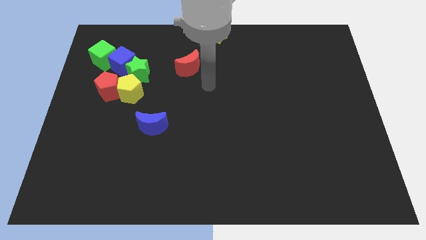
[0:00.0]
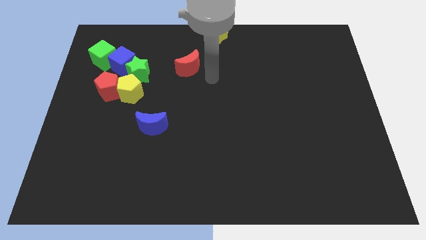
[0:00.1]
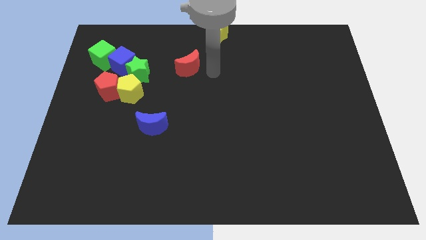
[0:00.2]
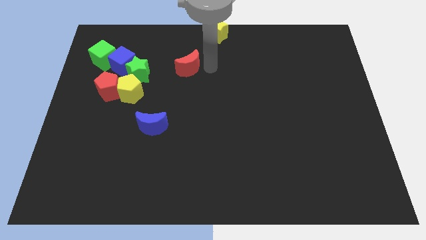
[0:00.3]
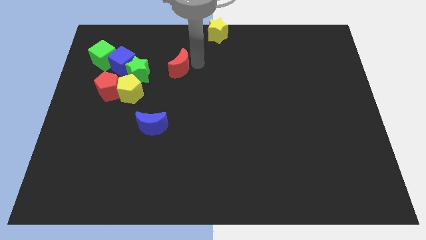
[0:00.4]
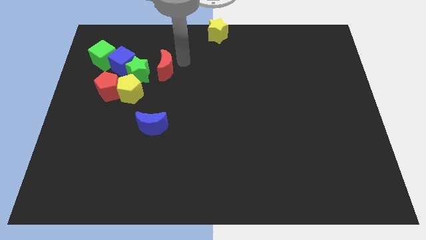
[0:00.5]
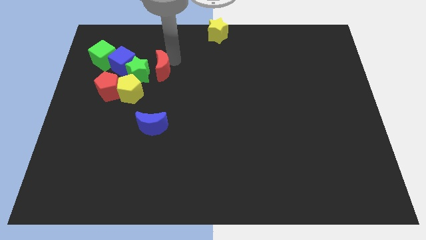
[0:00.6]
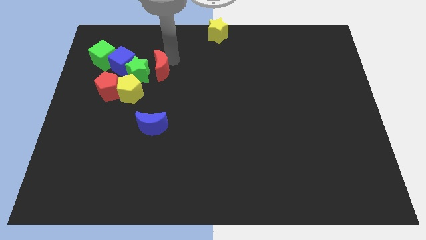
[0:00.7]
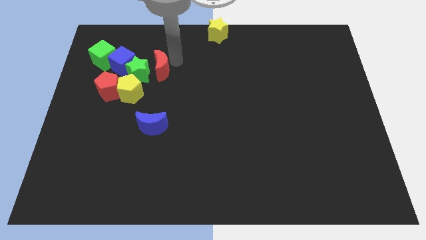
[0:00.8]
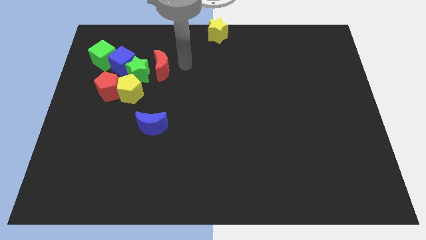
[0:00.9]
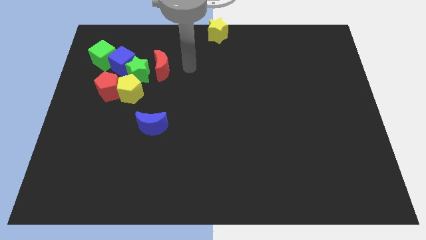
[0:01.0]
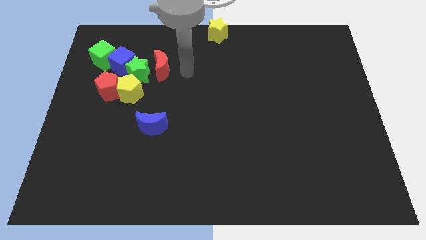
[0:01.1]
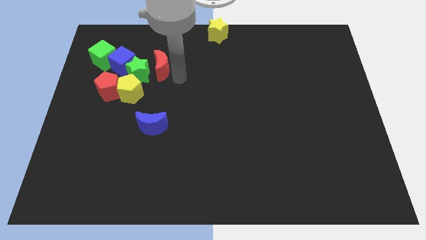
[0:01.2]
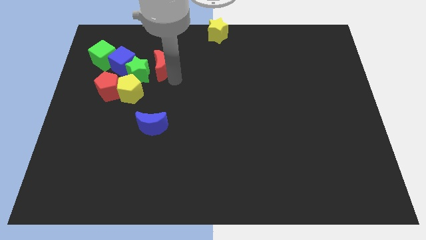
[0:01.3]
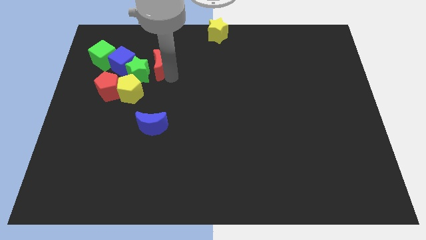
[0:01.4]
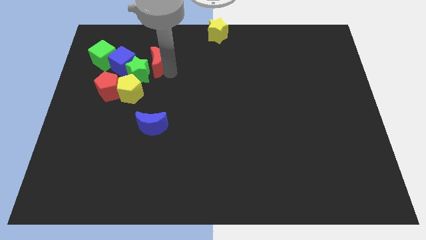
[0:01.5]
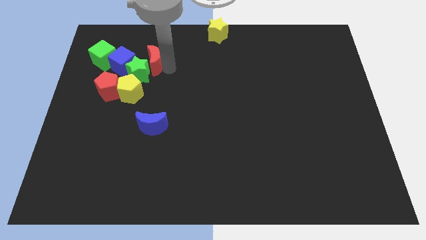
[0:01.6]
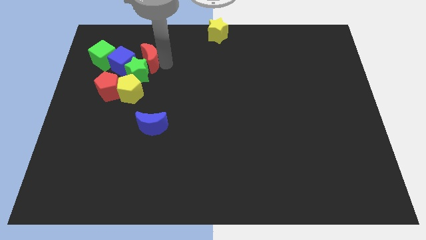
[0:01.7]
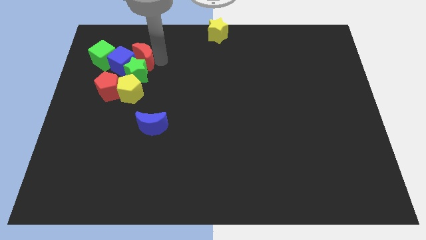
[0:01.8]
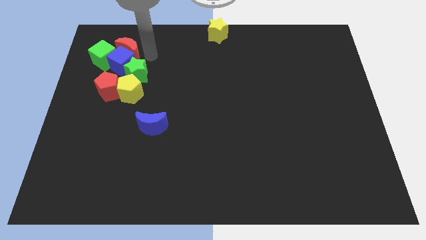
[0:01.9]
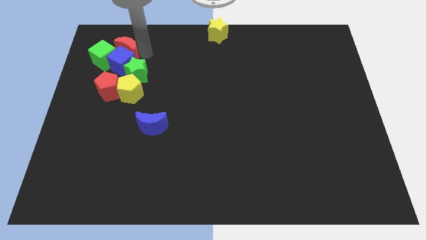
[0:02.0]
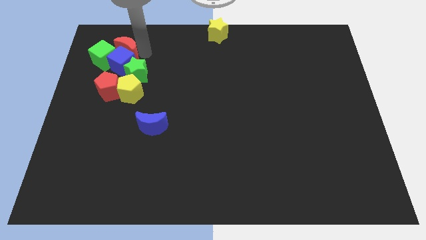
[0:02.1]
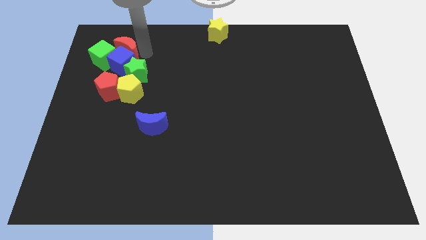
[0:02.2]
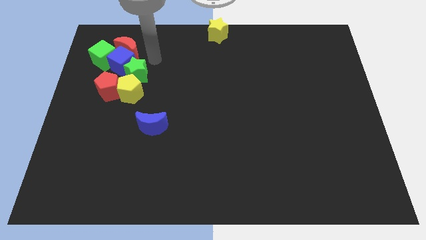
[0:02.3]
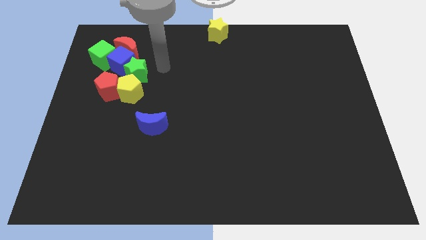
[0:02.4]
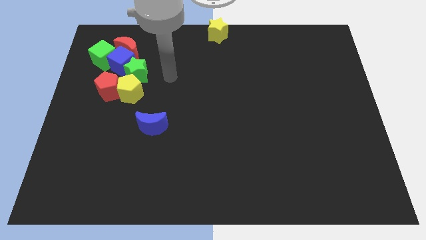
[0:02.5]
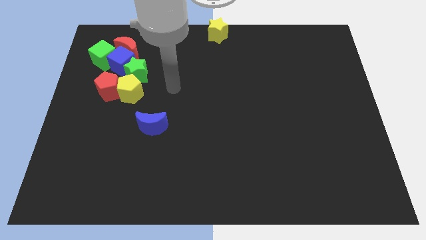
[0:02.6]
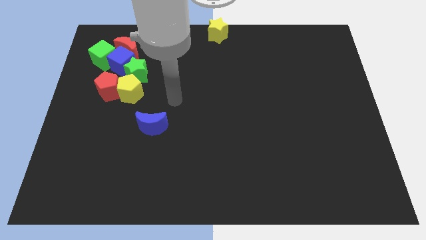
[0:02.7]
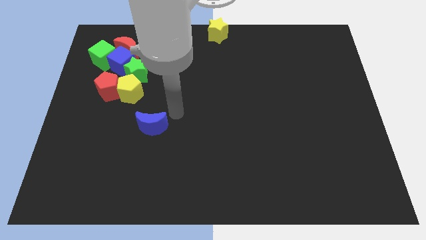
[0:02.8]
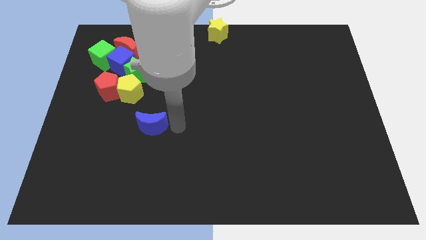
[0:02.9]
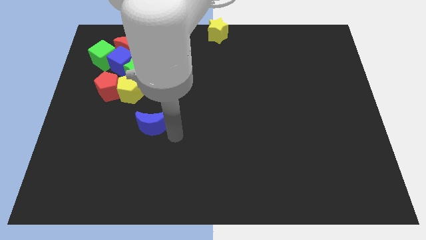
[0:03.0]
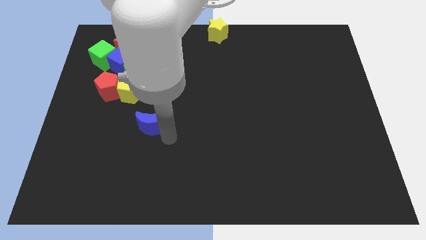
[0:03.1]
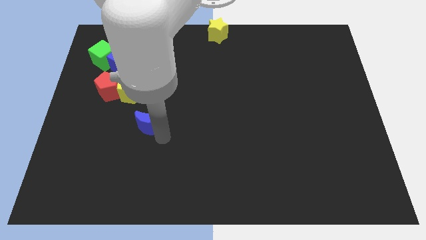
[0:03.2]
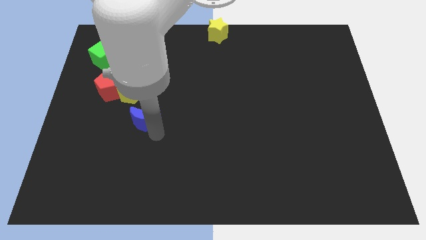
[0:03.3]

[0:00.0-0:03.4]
place the red moon to the top side of blue cube and green cube

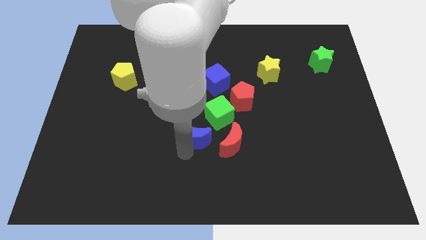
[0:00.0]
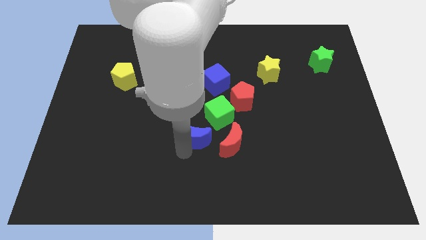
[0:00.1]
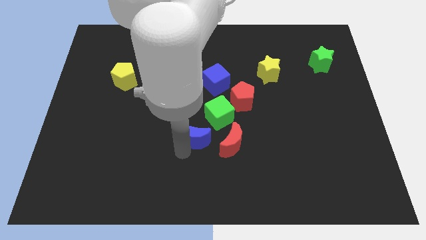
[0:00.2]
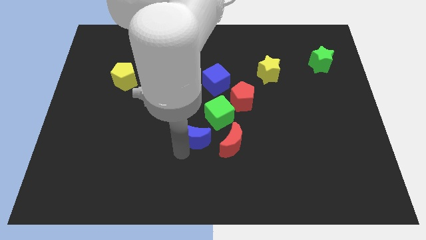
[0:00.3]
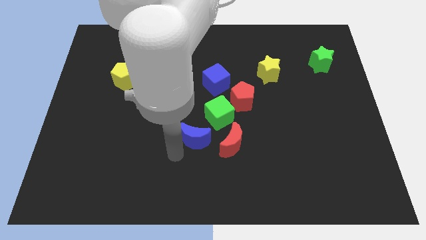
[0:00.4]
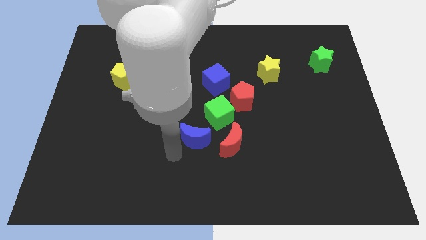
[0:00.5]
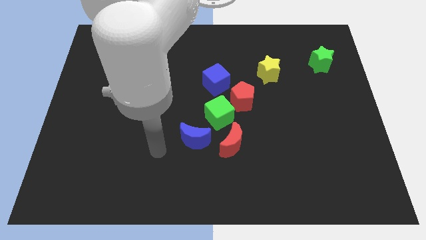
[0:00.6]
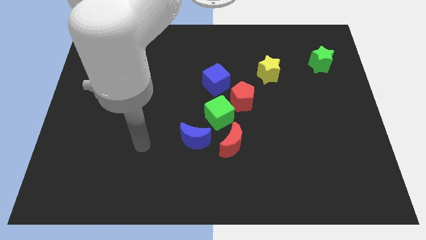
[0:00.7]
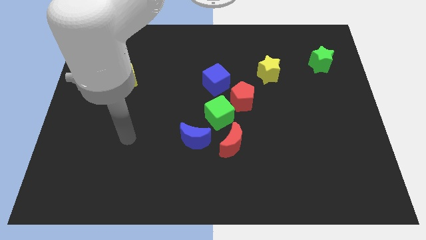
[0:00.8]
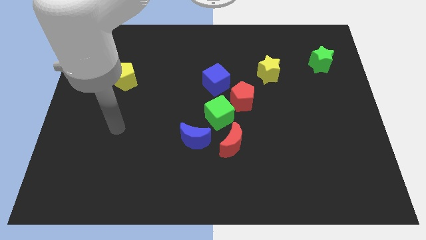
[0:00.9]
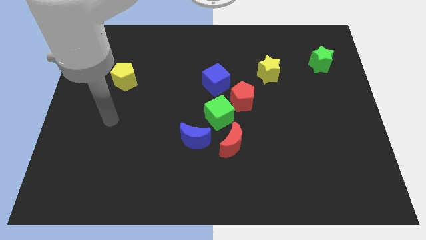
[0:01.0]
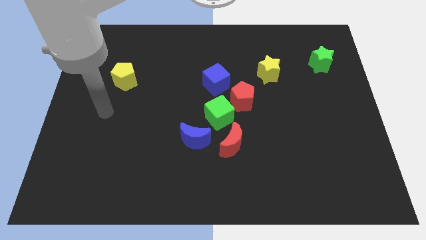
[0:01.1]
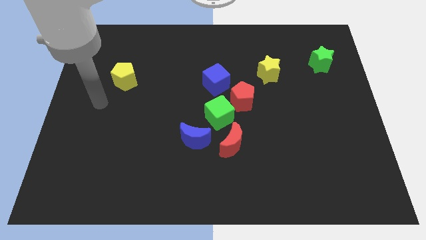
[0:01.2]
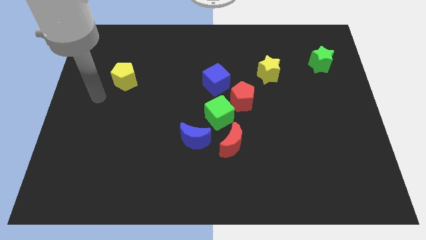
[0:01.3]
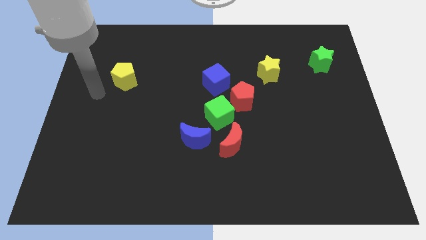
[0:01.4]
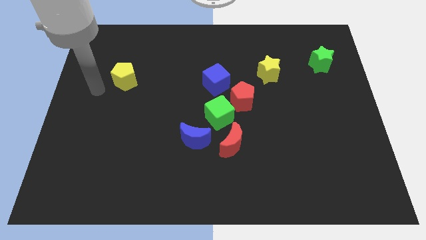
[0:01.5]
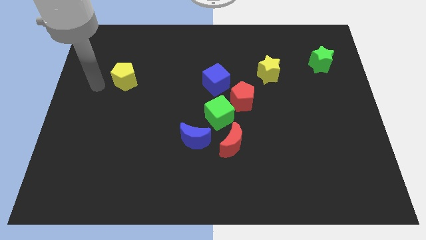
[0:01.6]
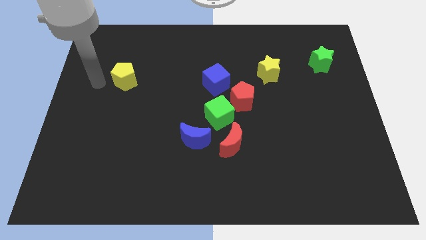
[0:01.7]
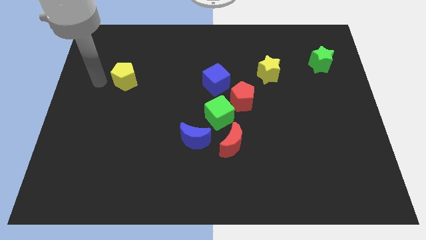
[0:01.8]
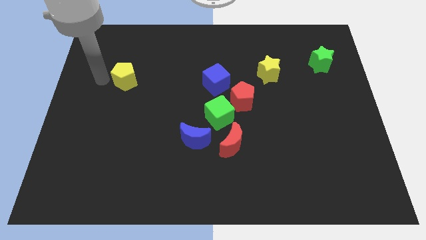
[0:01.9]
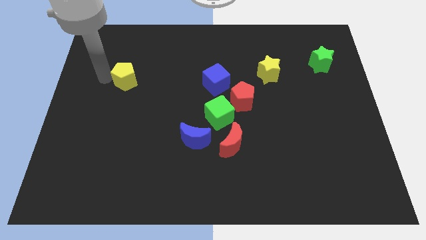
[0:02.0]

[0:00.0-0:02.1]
move your arm left to the yellow pentagon

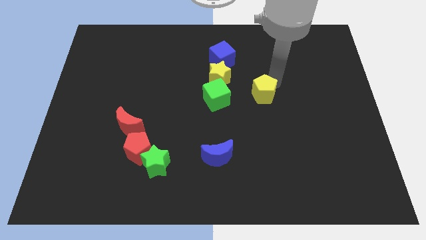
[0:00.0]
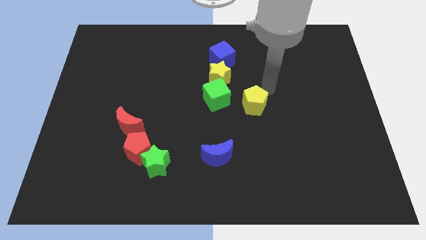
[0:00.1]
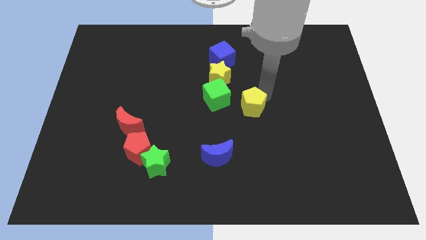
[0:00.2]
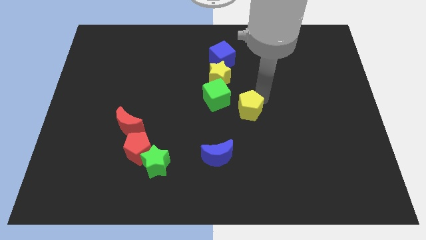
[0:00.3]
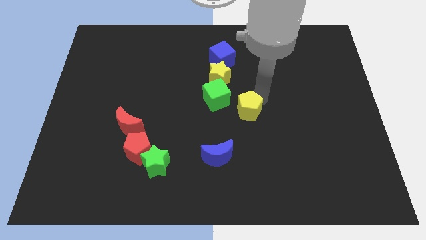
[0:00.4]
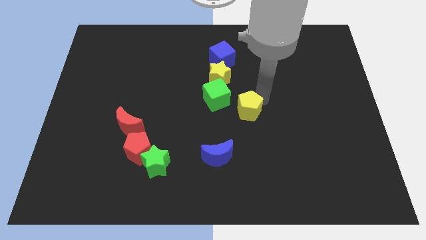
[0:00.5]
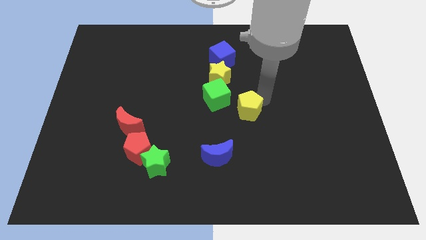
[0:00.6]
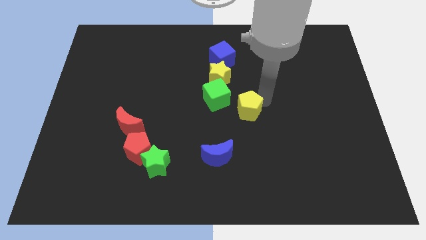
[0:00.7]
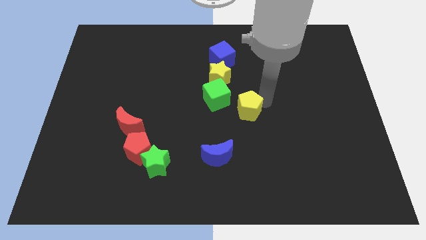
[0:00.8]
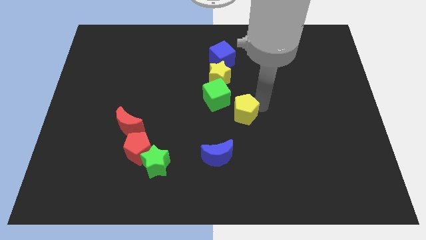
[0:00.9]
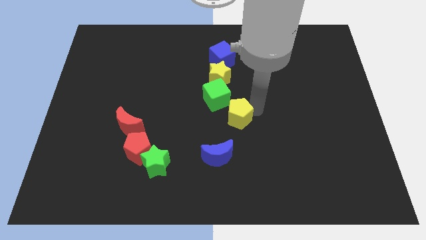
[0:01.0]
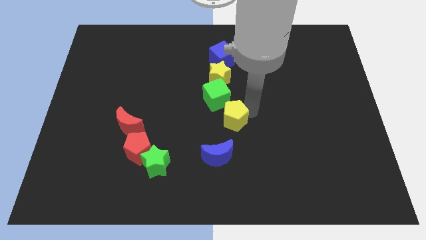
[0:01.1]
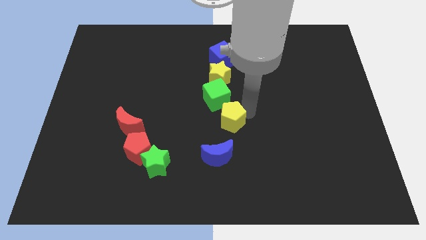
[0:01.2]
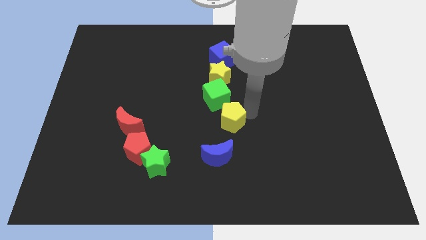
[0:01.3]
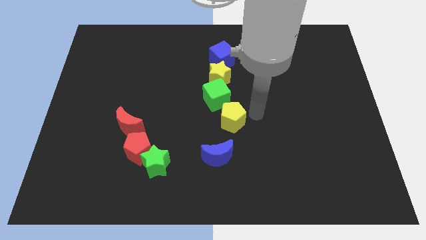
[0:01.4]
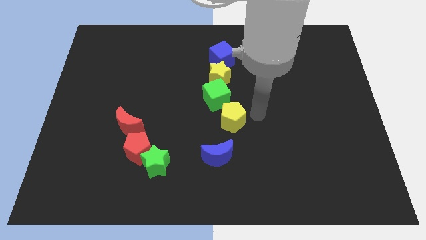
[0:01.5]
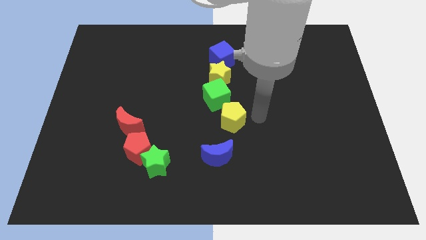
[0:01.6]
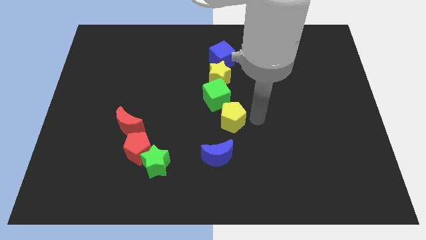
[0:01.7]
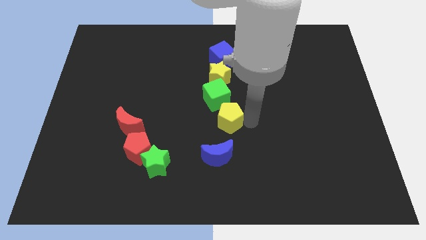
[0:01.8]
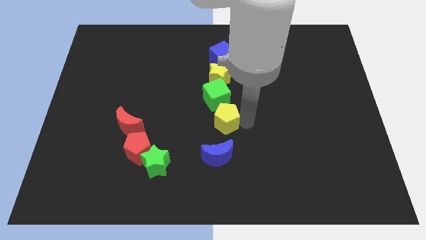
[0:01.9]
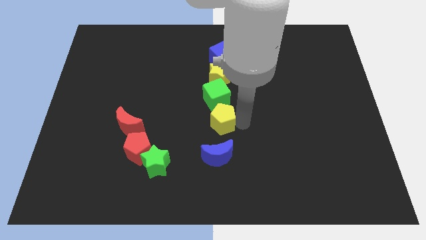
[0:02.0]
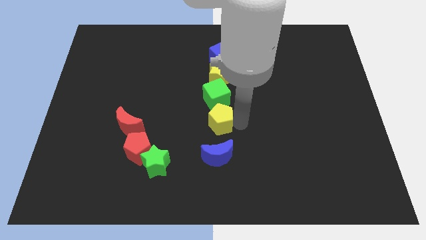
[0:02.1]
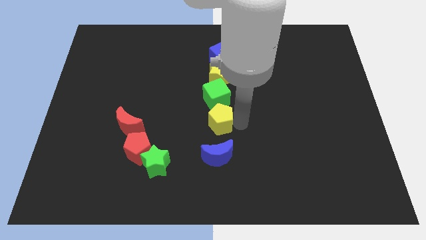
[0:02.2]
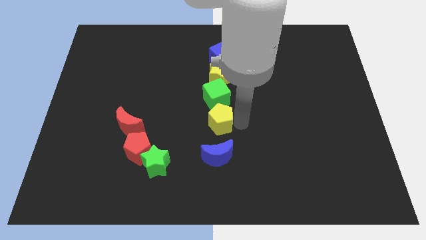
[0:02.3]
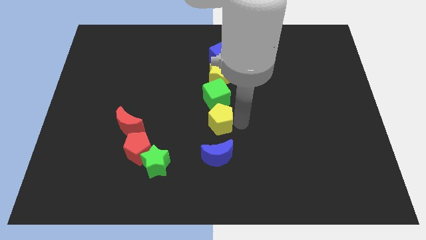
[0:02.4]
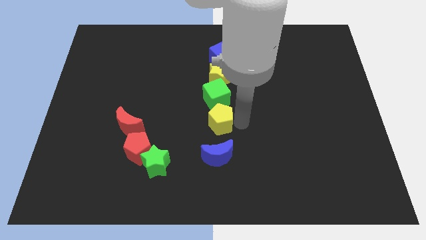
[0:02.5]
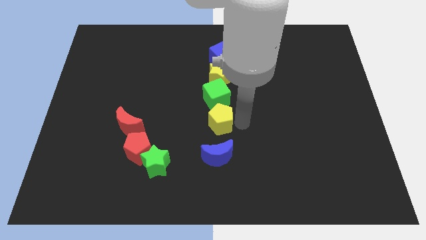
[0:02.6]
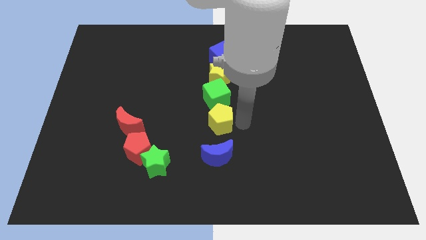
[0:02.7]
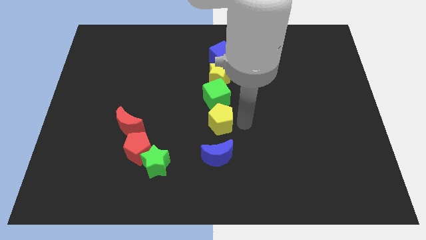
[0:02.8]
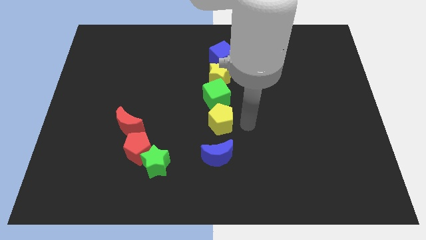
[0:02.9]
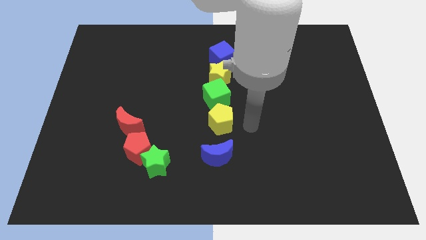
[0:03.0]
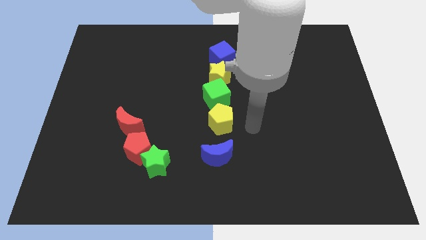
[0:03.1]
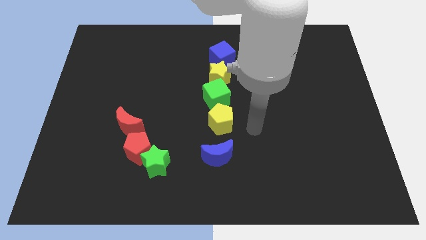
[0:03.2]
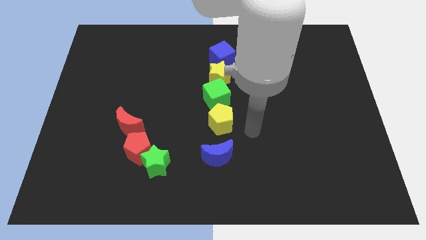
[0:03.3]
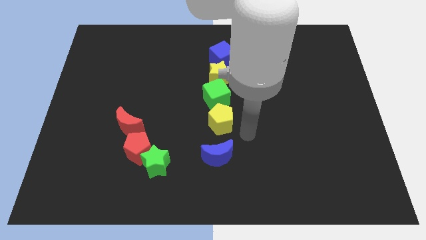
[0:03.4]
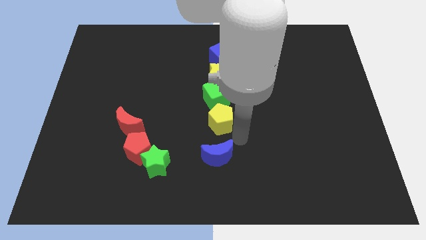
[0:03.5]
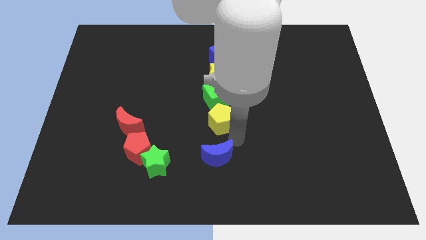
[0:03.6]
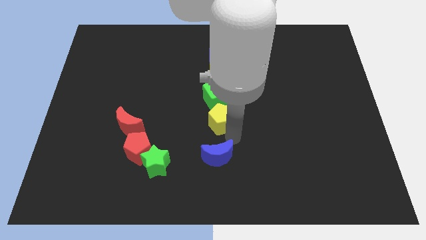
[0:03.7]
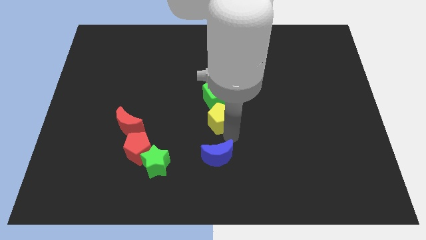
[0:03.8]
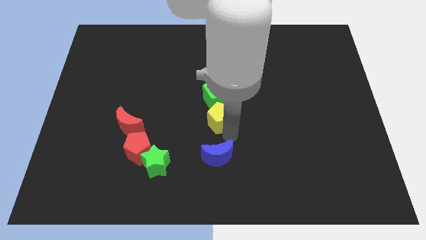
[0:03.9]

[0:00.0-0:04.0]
place the yellow pentagon below the green cube in a line
